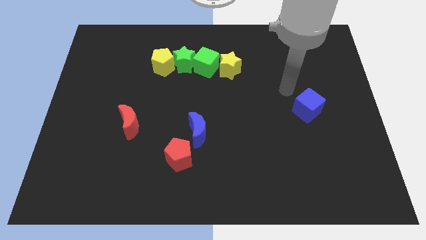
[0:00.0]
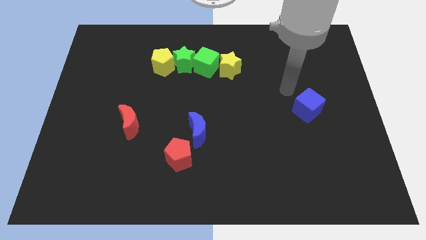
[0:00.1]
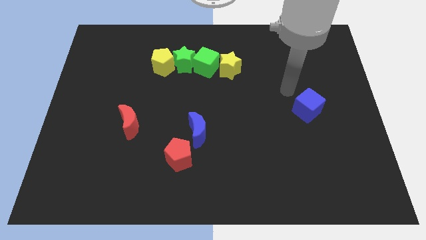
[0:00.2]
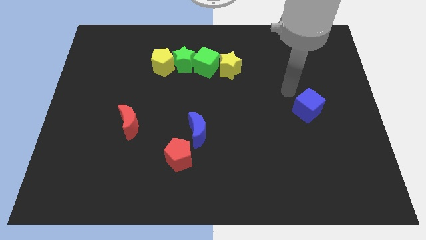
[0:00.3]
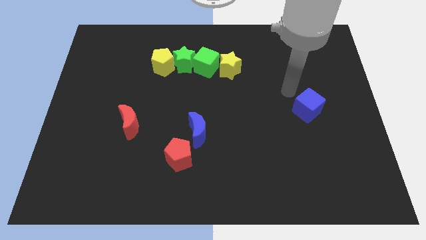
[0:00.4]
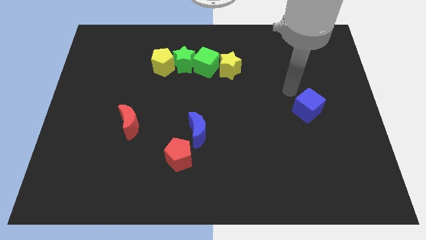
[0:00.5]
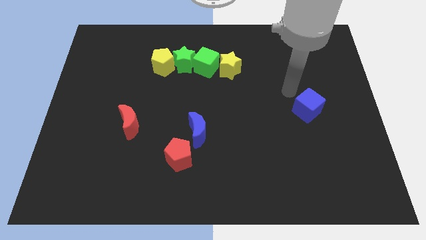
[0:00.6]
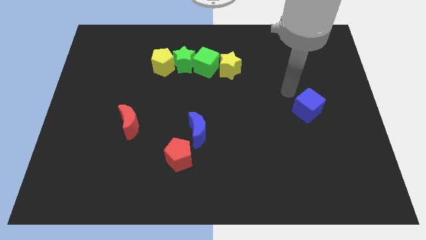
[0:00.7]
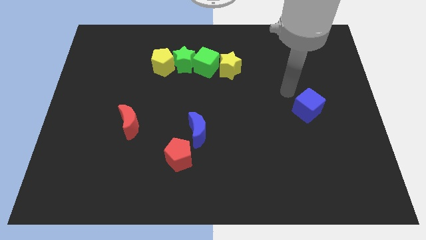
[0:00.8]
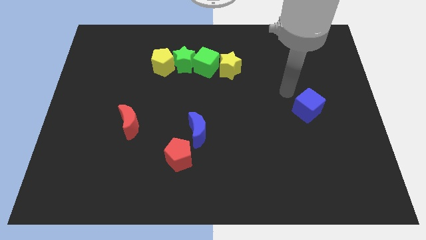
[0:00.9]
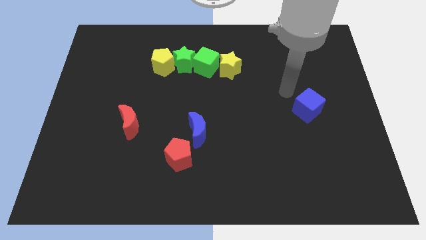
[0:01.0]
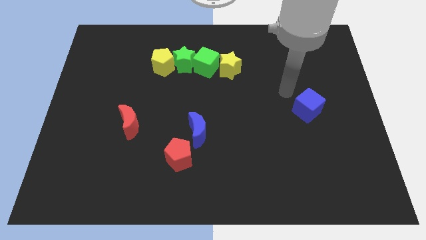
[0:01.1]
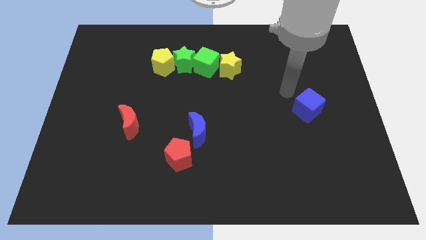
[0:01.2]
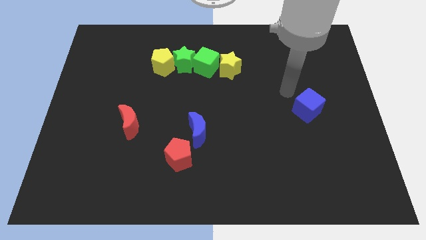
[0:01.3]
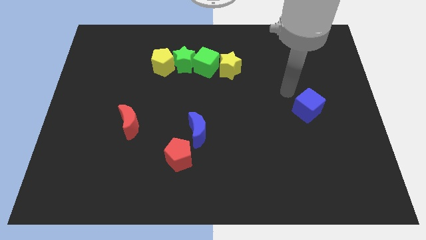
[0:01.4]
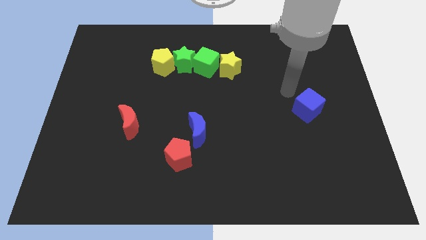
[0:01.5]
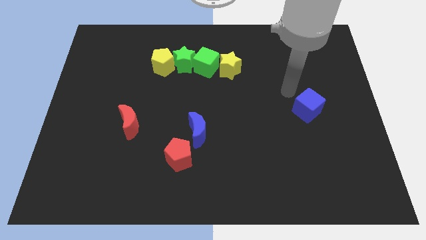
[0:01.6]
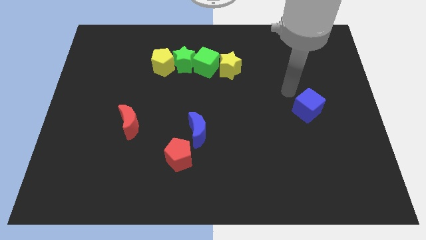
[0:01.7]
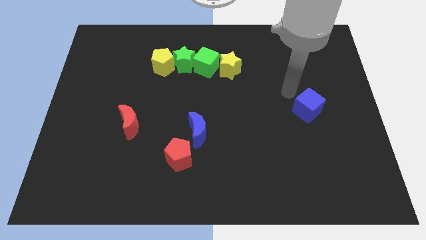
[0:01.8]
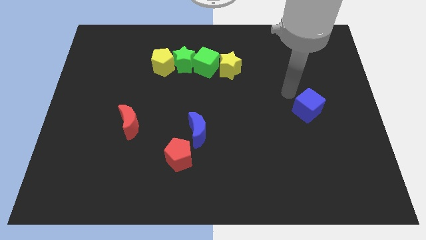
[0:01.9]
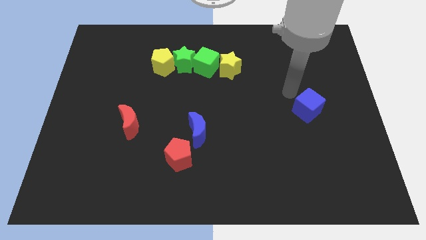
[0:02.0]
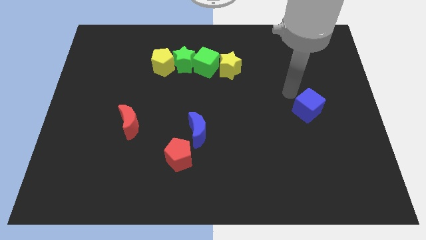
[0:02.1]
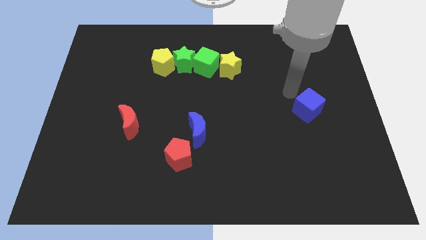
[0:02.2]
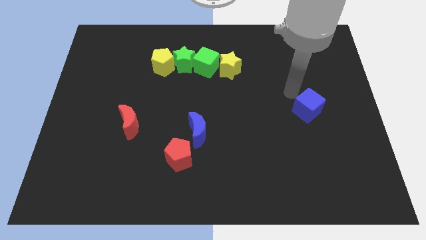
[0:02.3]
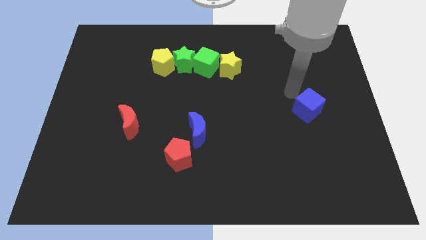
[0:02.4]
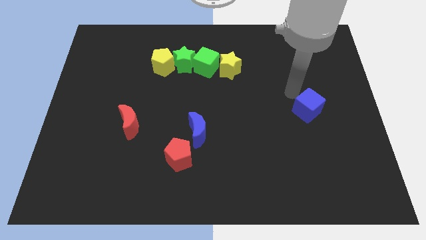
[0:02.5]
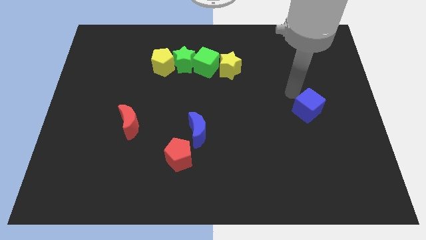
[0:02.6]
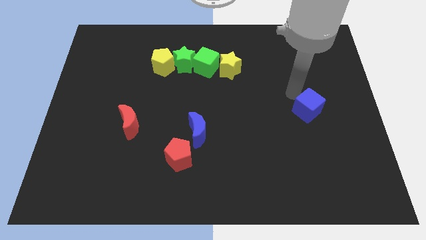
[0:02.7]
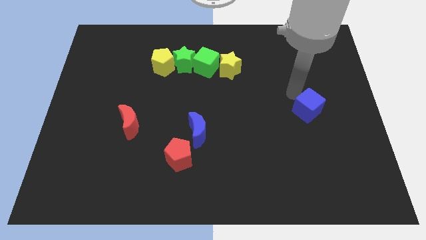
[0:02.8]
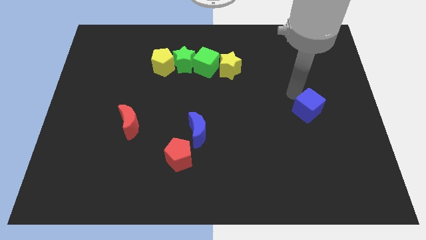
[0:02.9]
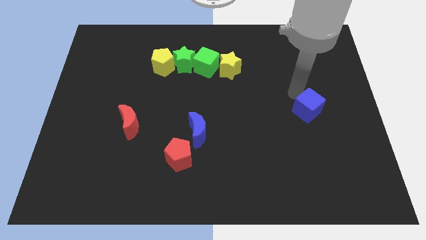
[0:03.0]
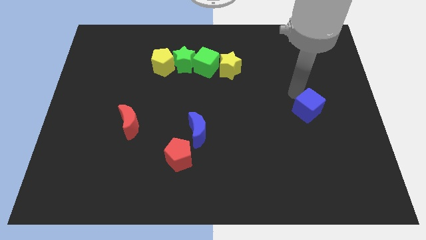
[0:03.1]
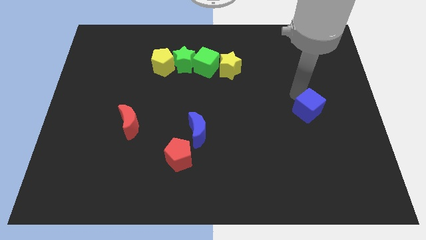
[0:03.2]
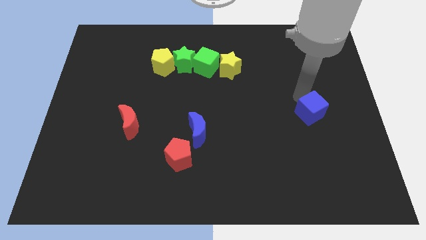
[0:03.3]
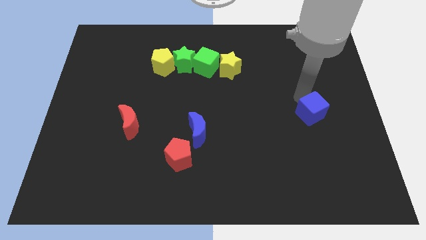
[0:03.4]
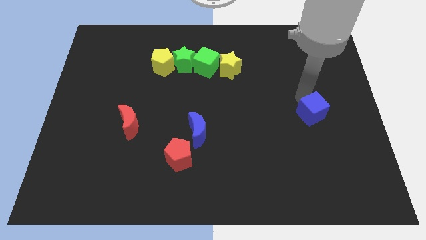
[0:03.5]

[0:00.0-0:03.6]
move your arm to the top side of the blue cube

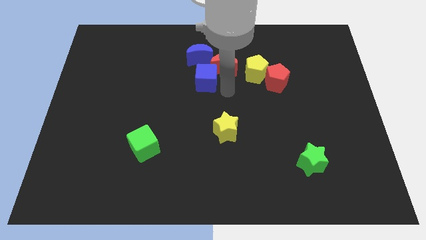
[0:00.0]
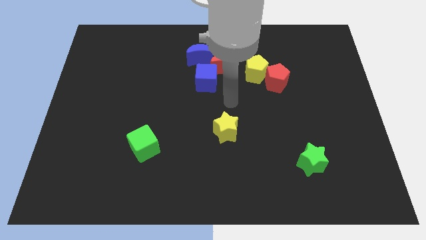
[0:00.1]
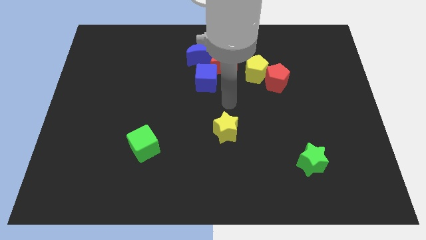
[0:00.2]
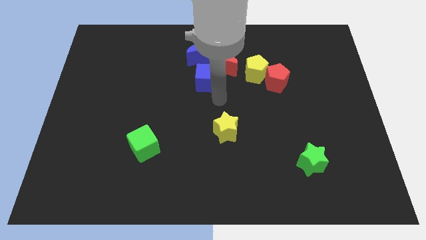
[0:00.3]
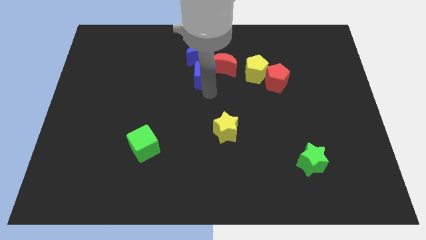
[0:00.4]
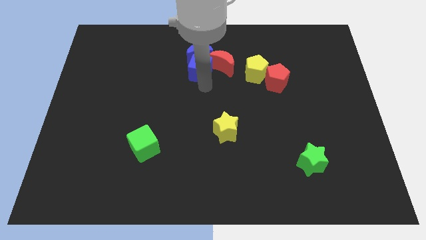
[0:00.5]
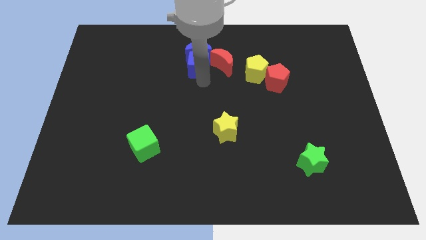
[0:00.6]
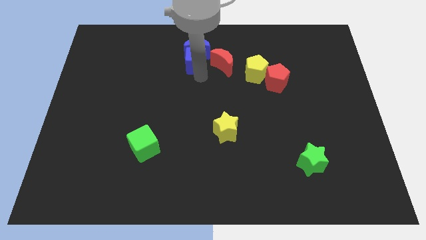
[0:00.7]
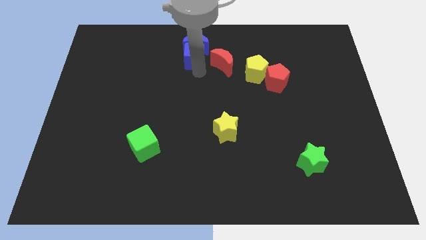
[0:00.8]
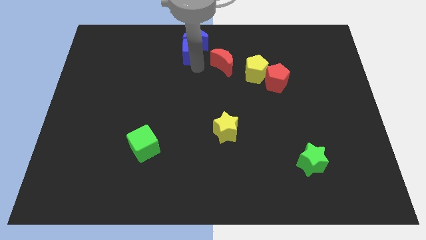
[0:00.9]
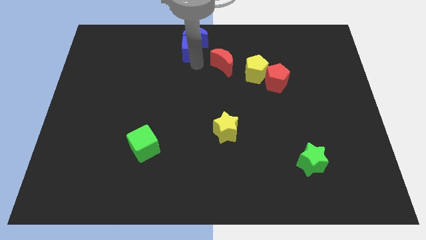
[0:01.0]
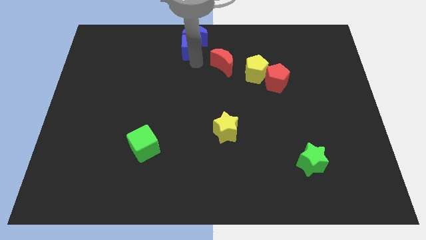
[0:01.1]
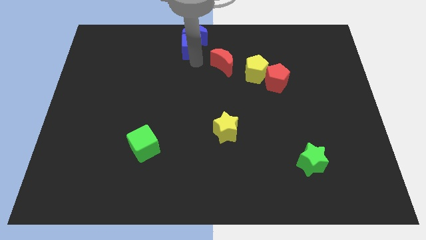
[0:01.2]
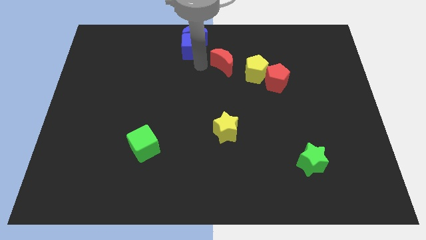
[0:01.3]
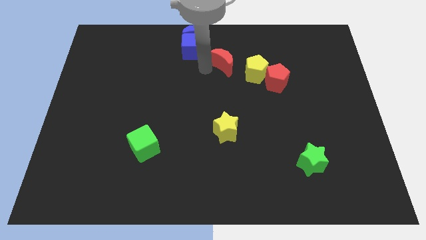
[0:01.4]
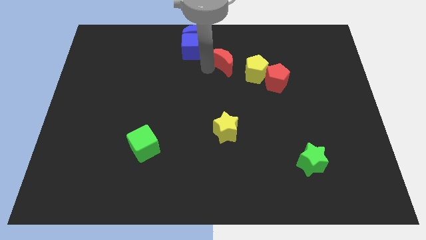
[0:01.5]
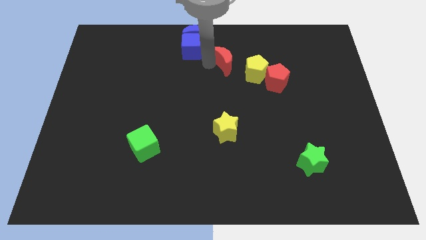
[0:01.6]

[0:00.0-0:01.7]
push the blue crescent with blue cube

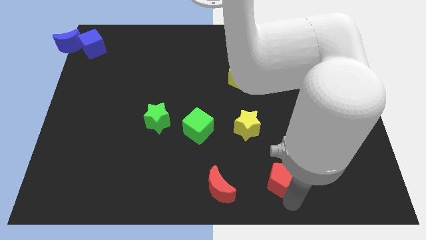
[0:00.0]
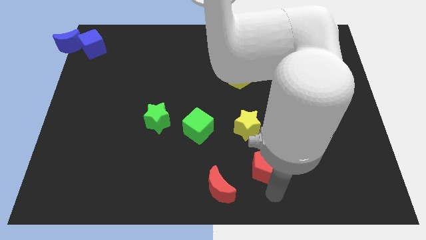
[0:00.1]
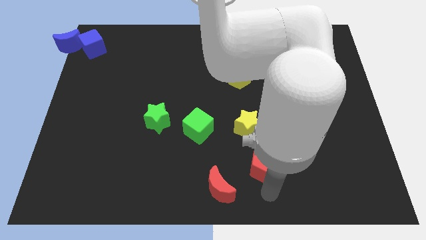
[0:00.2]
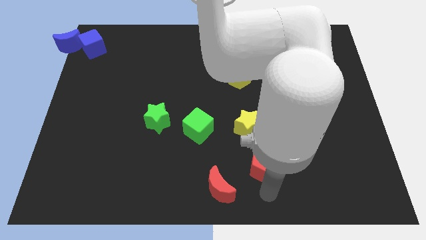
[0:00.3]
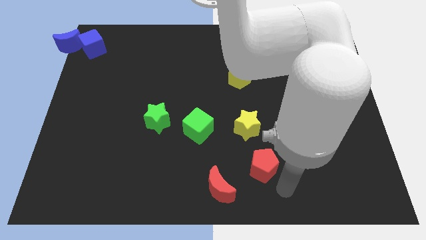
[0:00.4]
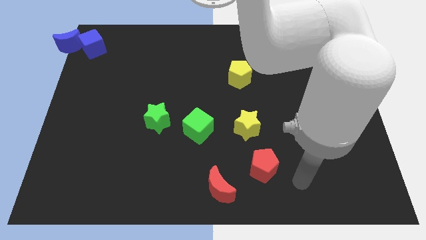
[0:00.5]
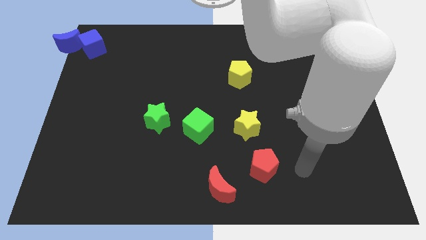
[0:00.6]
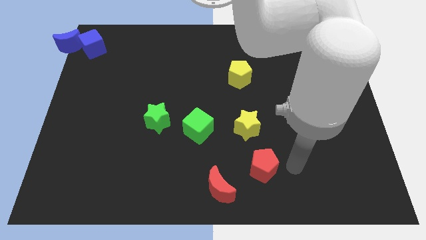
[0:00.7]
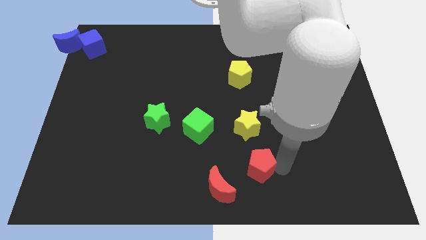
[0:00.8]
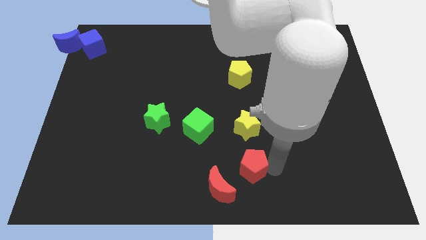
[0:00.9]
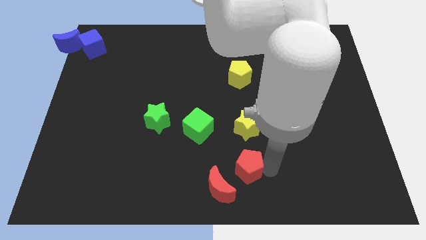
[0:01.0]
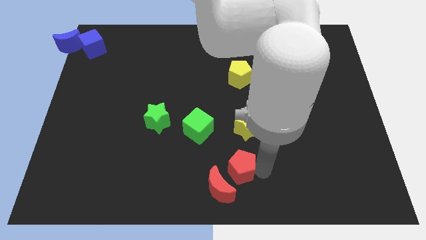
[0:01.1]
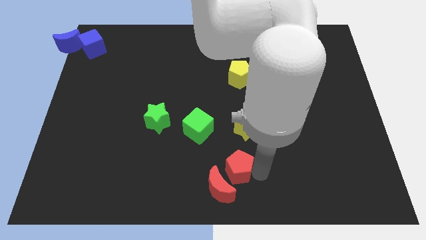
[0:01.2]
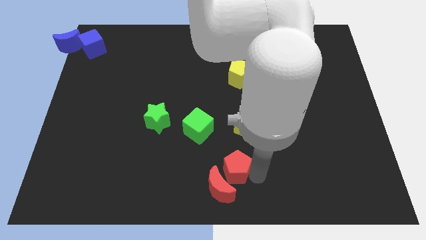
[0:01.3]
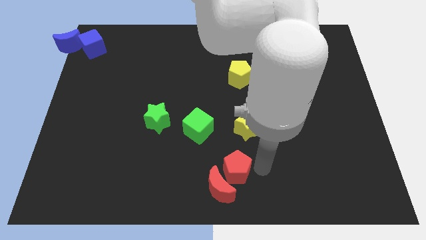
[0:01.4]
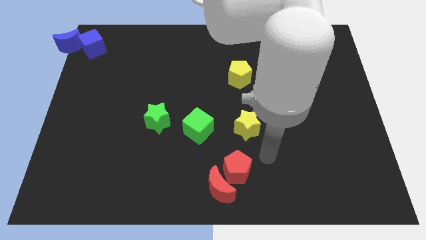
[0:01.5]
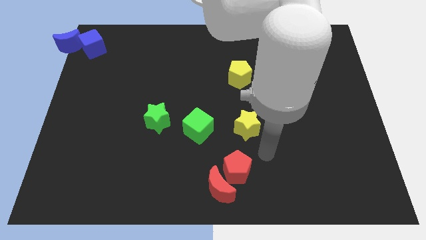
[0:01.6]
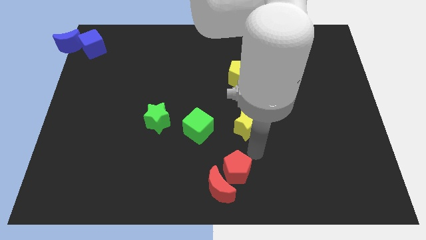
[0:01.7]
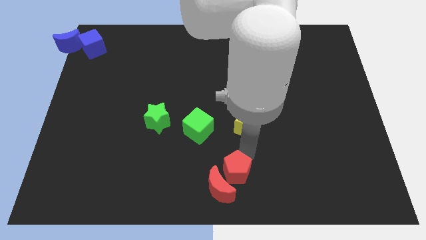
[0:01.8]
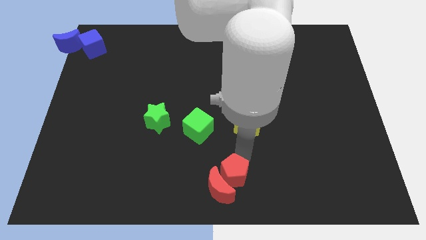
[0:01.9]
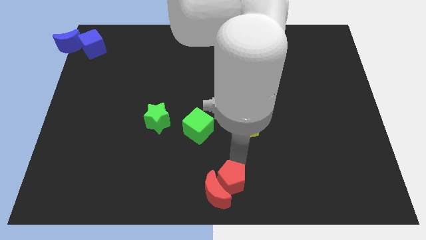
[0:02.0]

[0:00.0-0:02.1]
push the red pentagon into the red crescent

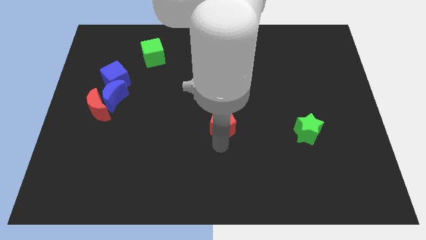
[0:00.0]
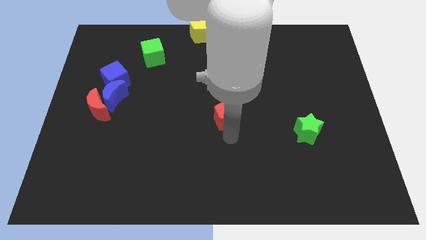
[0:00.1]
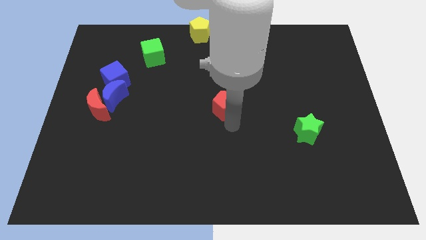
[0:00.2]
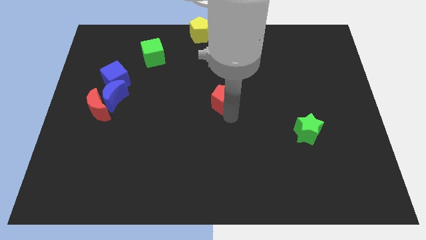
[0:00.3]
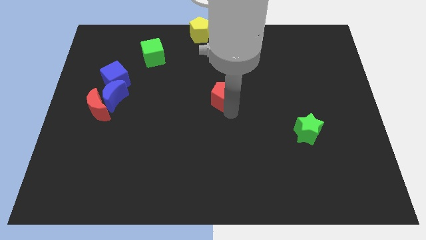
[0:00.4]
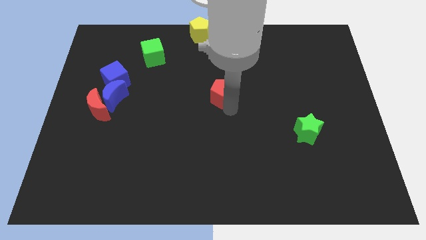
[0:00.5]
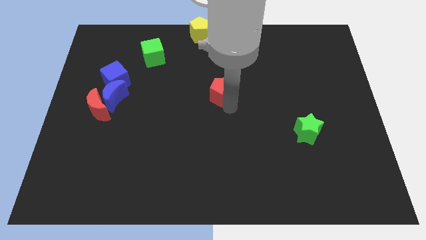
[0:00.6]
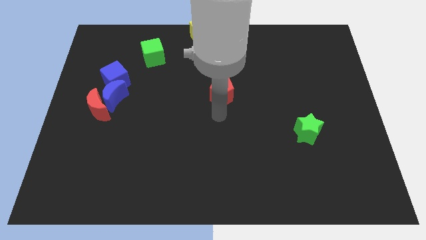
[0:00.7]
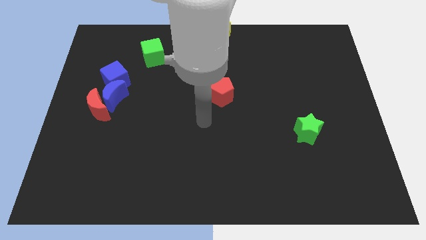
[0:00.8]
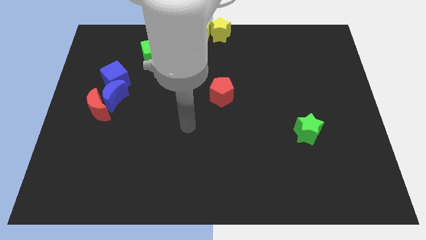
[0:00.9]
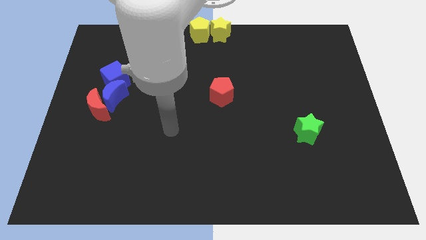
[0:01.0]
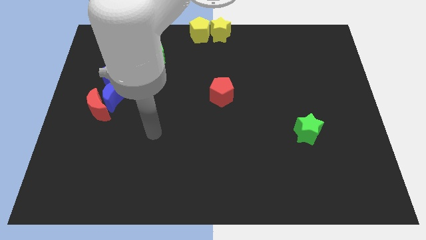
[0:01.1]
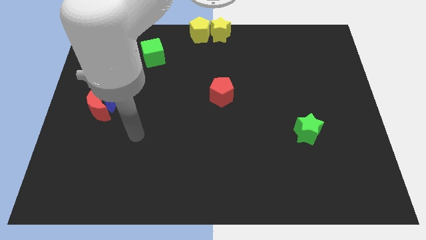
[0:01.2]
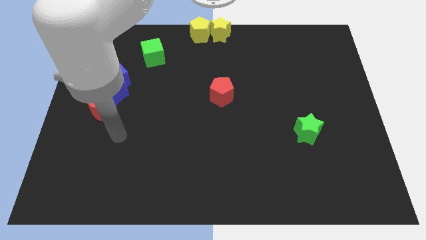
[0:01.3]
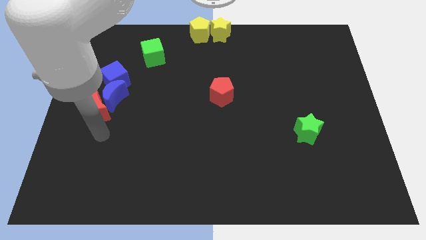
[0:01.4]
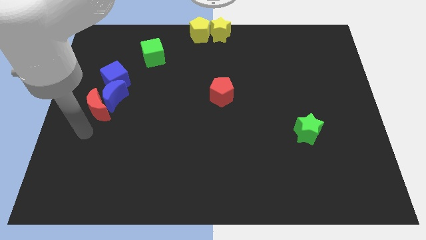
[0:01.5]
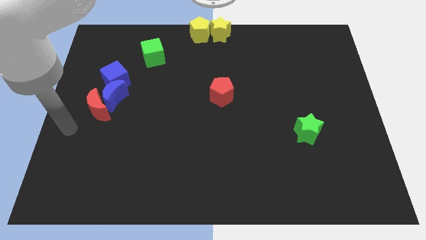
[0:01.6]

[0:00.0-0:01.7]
place the red pentagon at the center of the board

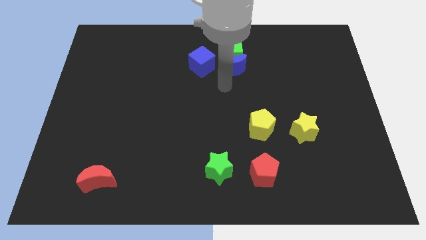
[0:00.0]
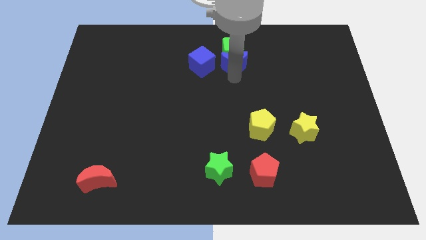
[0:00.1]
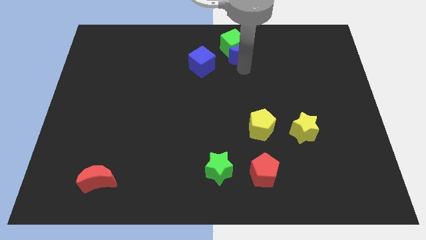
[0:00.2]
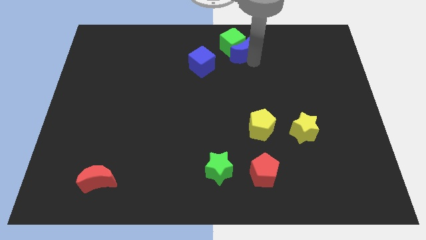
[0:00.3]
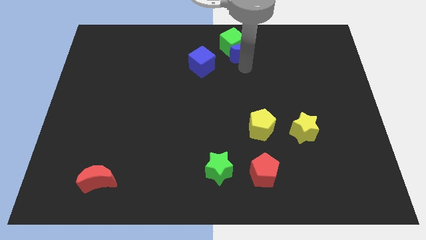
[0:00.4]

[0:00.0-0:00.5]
push the blue crescent along with green cube to the top center board
